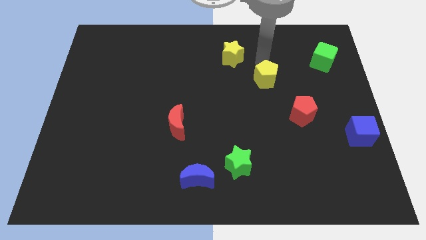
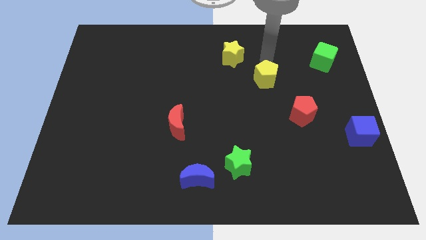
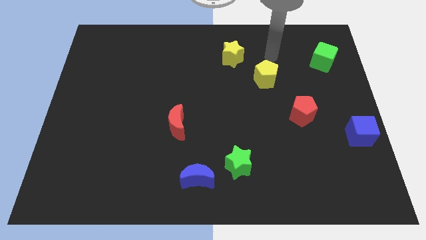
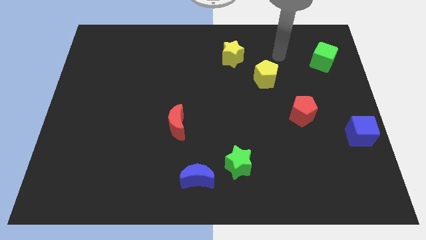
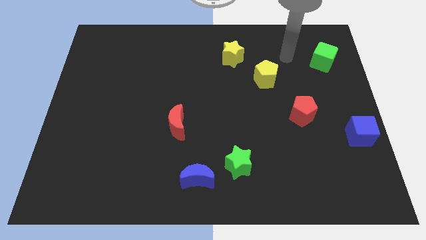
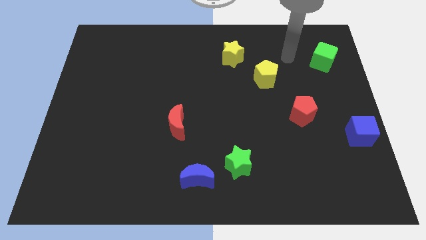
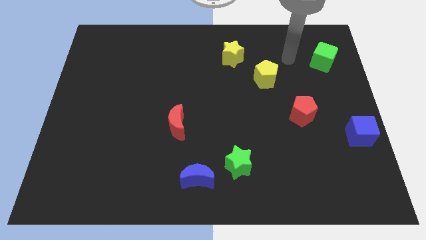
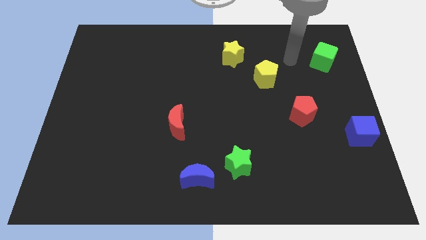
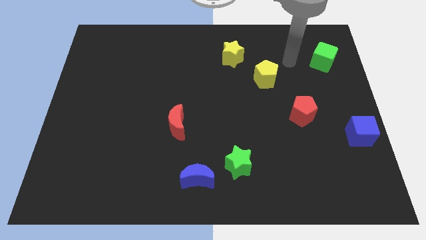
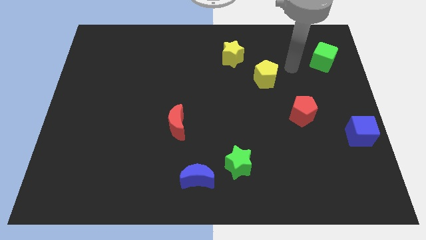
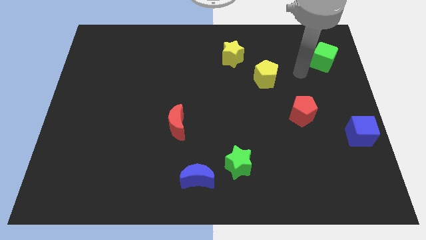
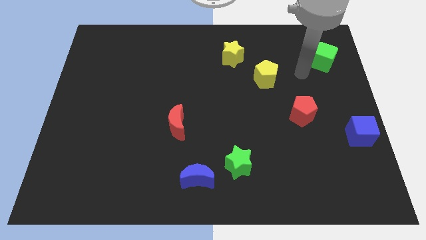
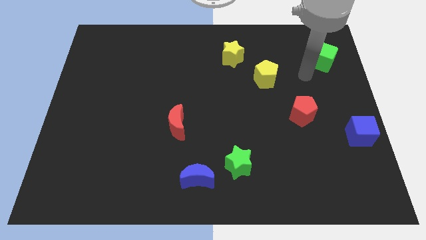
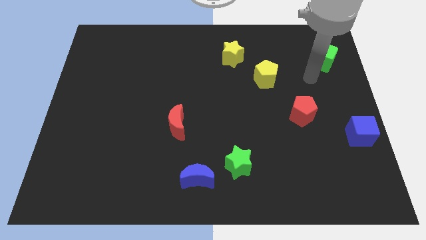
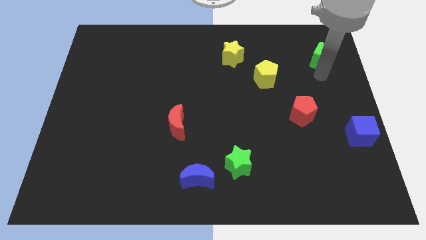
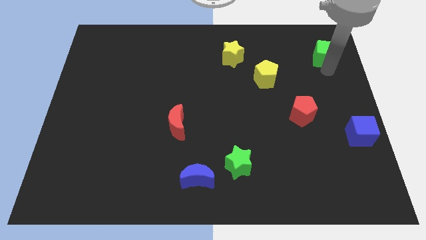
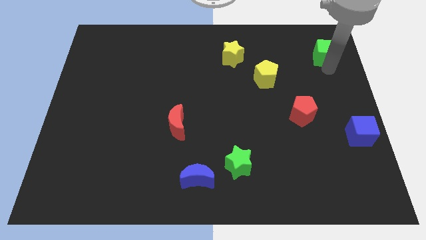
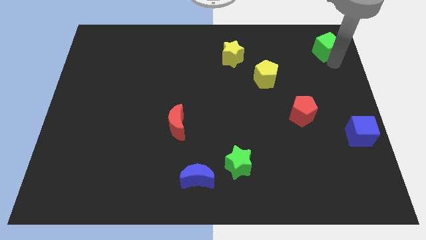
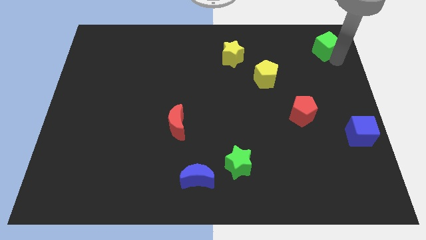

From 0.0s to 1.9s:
move the arm into the green cube

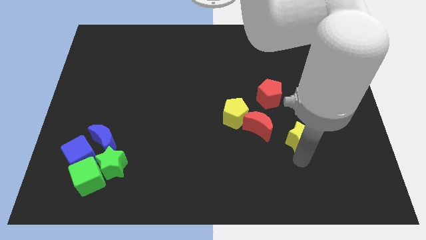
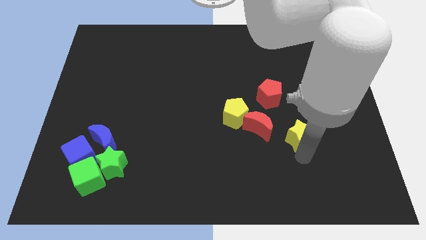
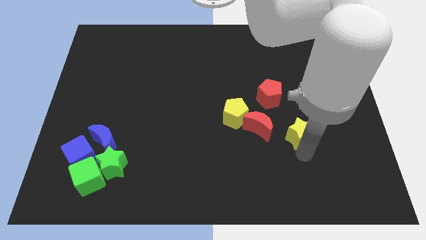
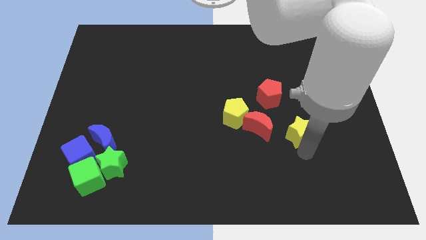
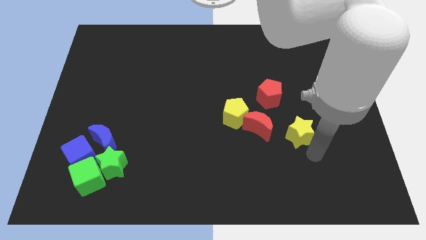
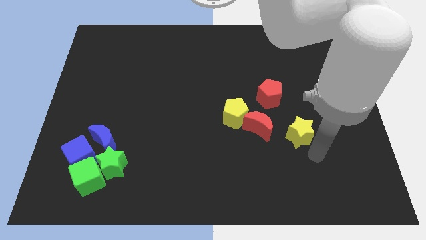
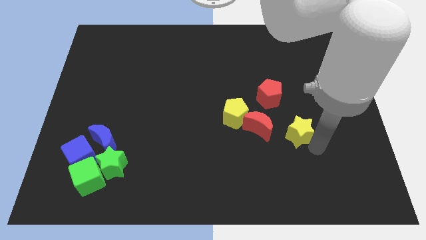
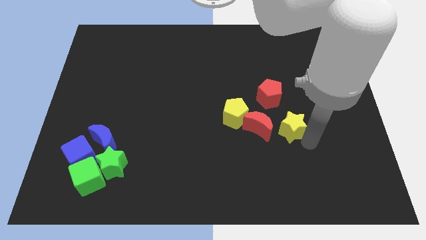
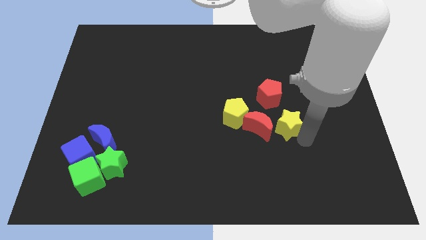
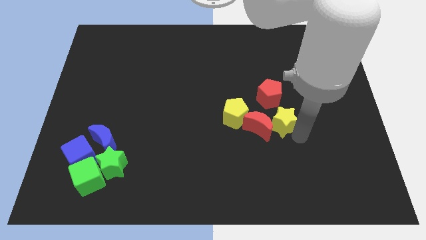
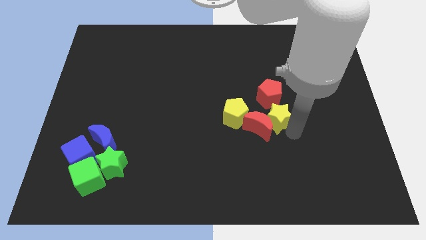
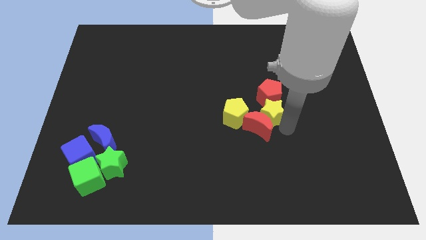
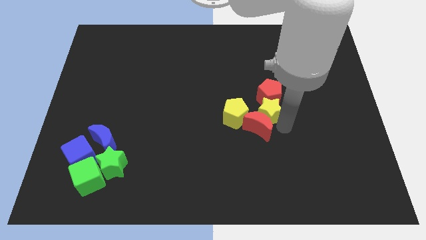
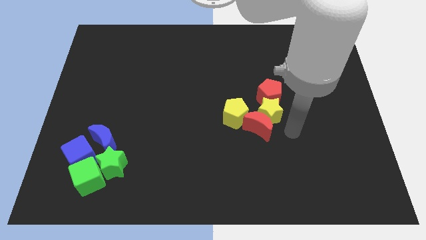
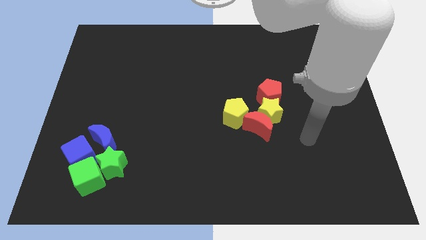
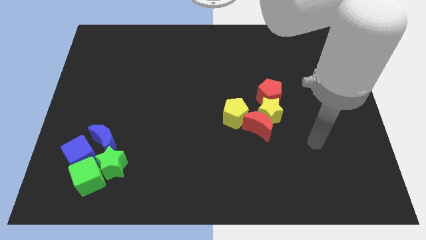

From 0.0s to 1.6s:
place yellow star below the red pentagon

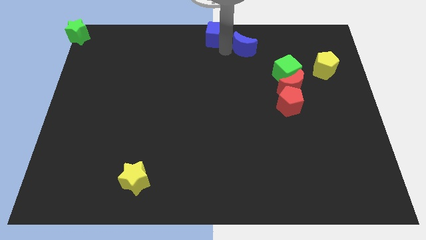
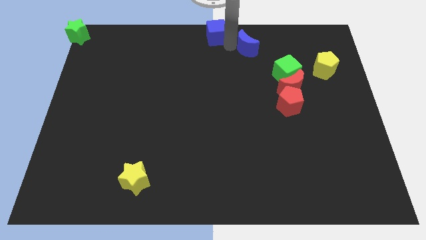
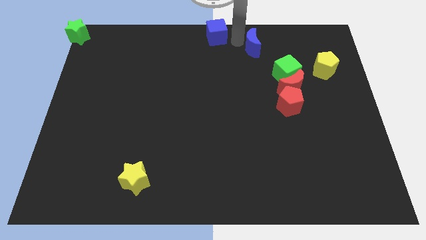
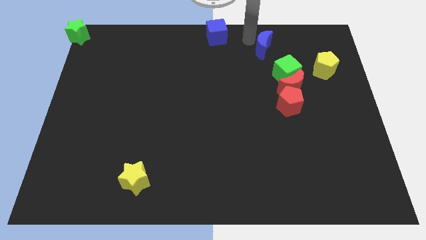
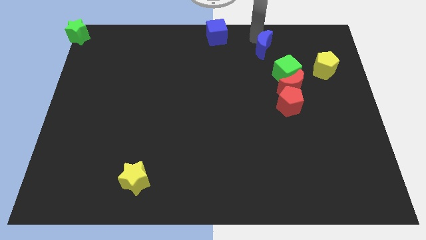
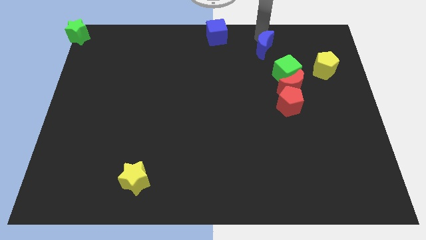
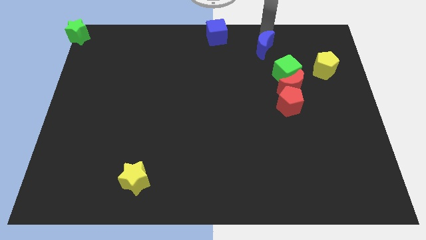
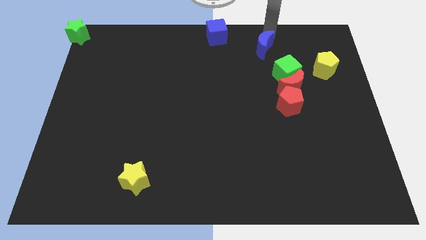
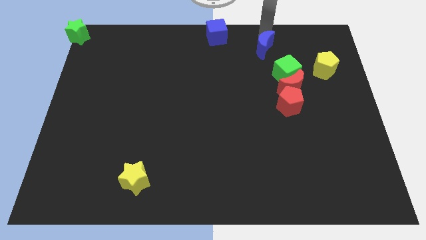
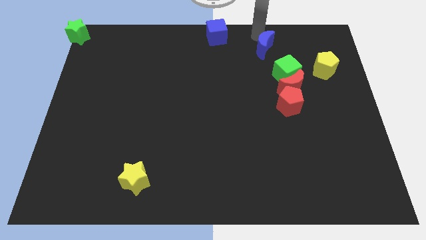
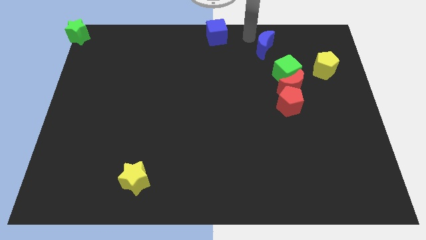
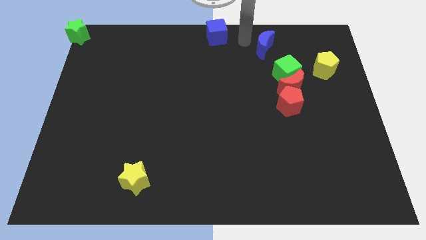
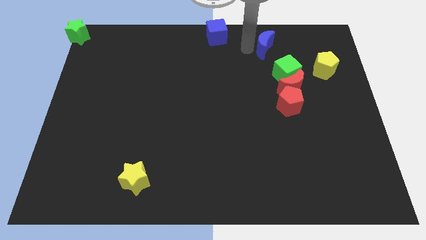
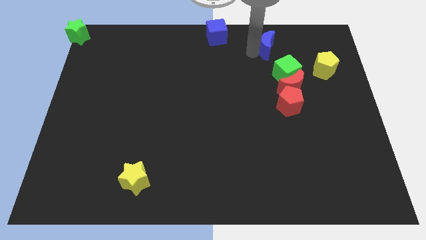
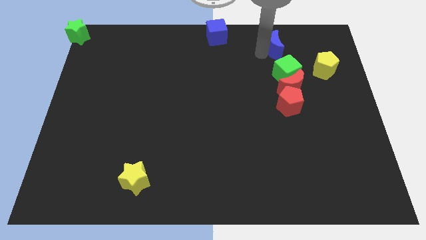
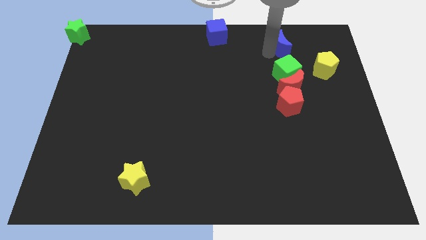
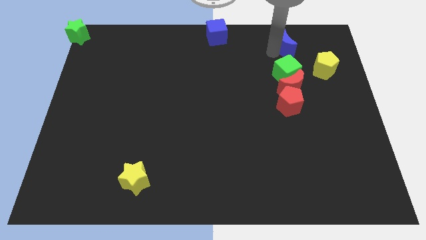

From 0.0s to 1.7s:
move the blue crescent to the top of the green cube

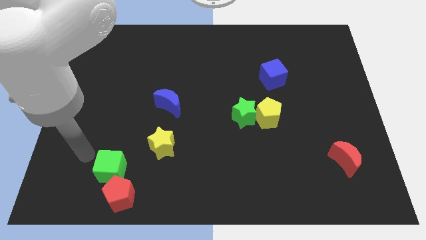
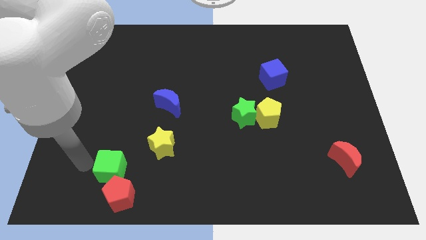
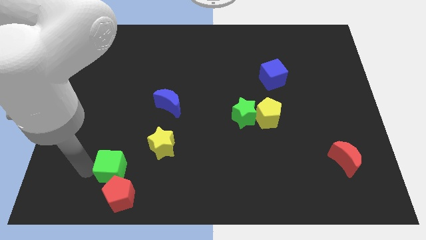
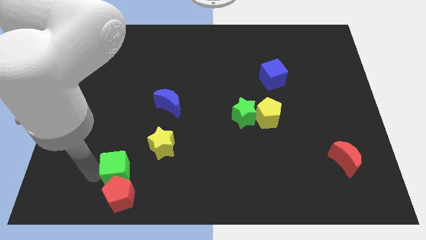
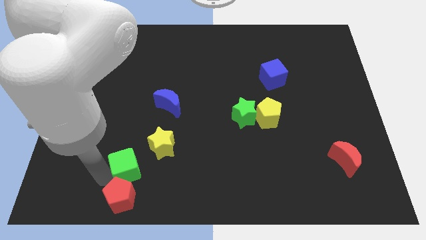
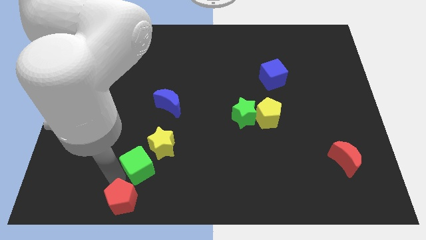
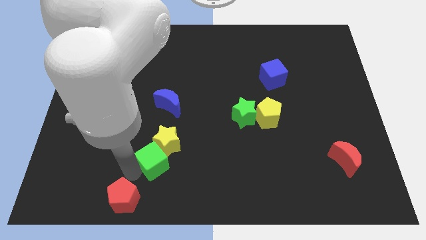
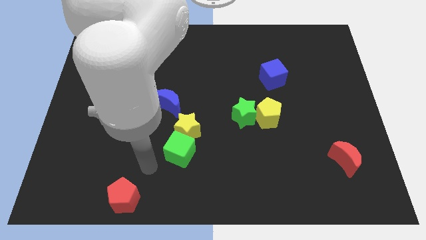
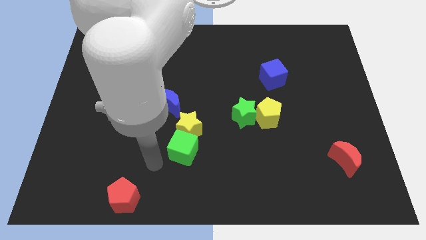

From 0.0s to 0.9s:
push the green cube into the yellow star

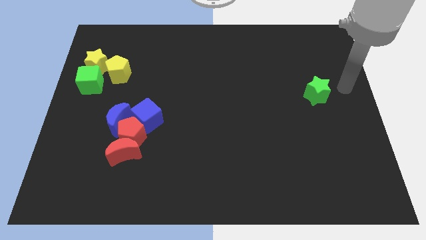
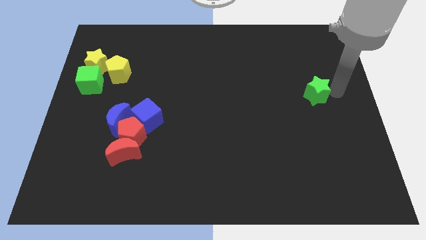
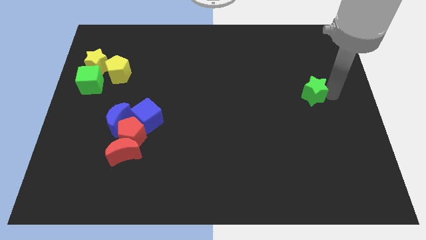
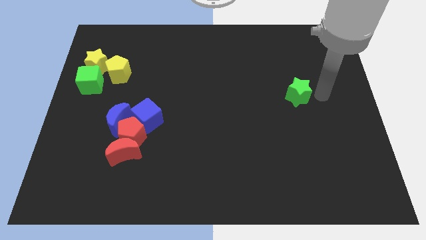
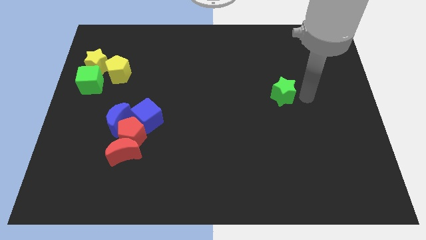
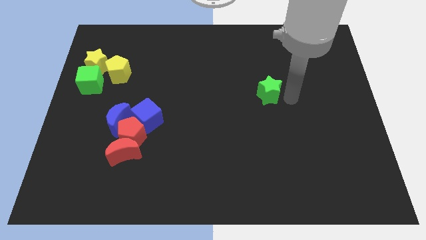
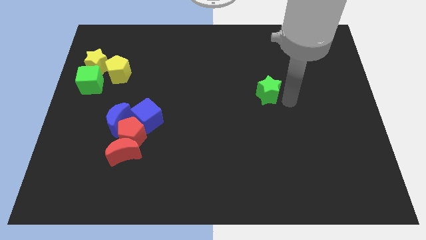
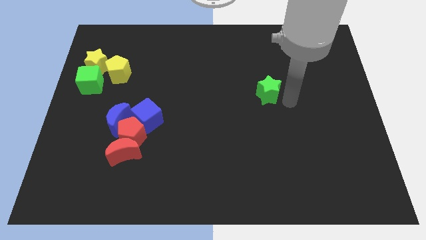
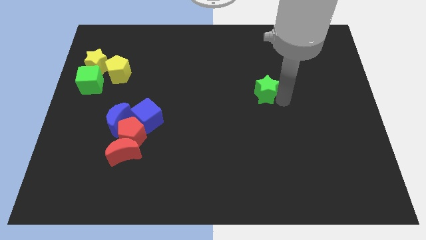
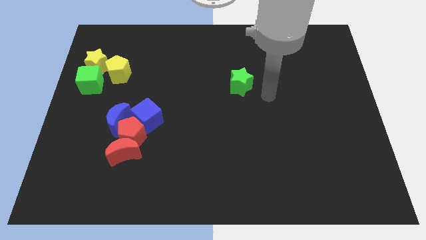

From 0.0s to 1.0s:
push green star slightly towards left

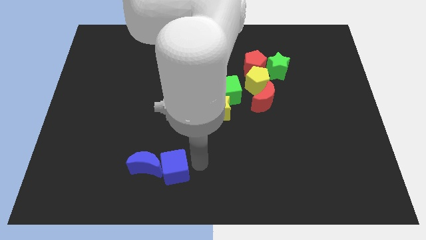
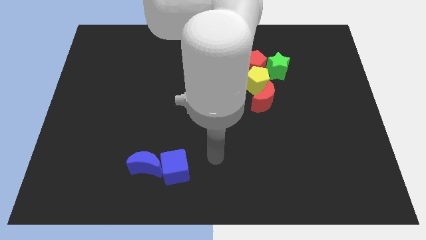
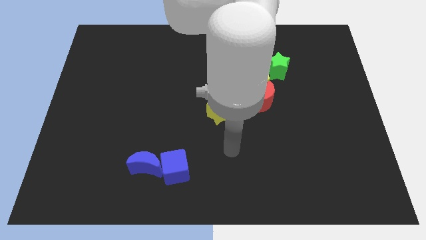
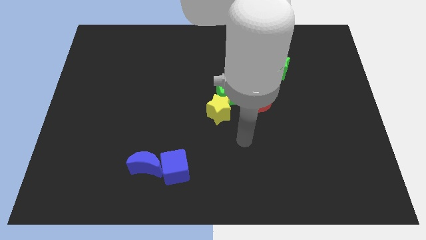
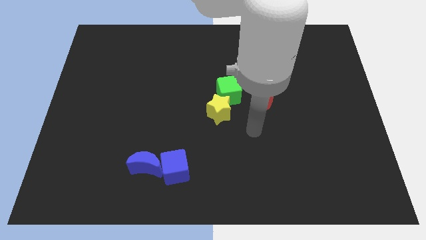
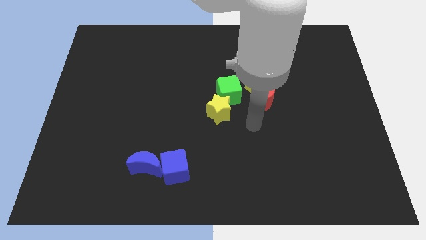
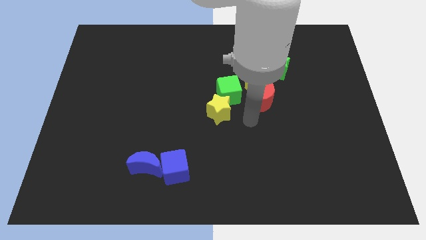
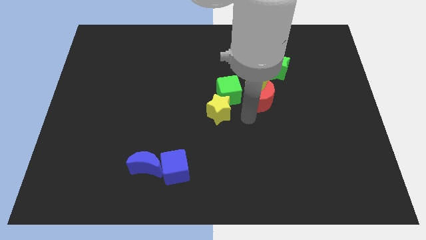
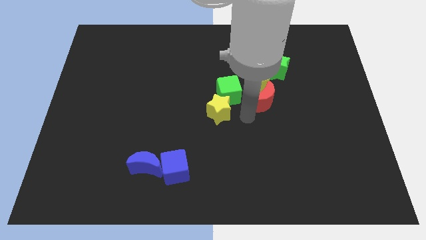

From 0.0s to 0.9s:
move the arm to the right side of the yellow star

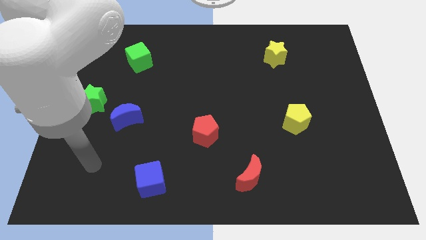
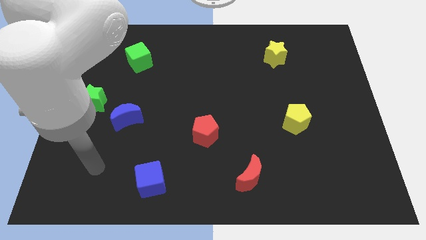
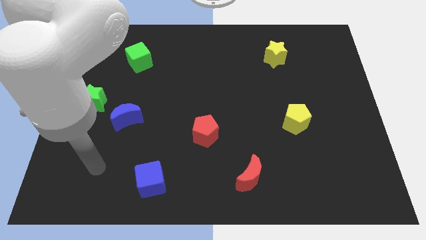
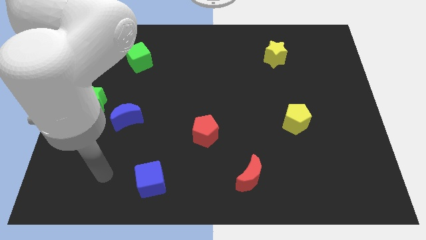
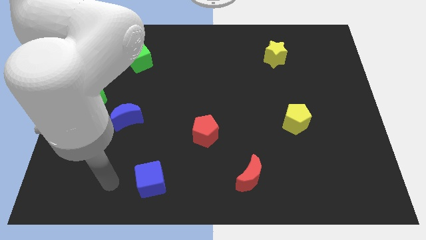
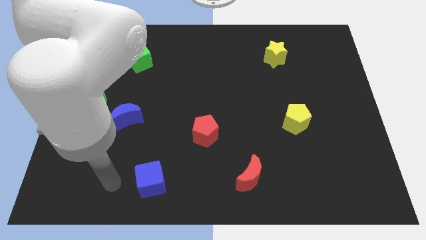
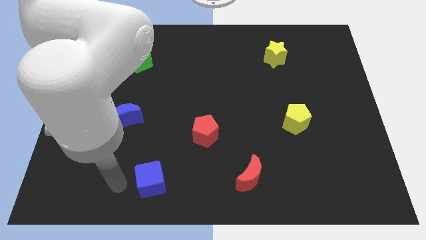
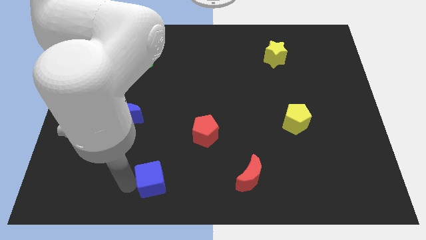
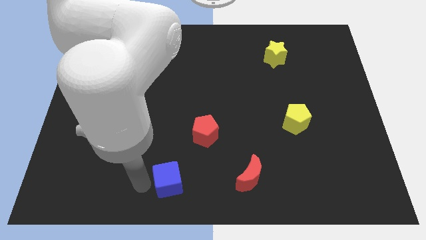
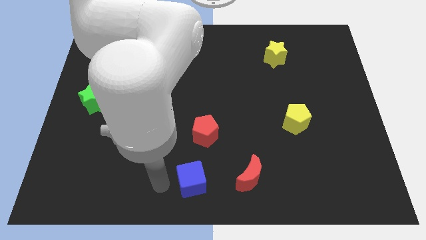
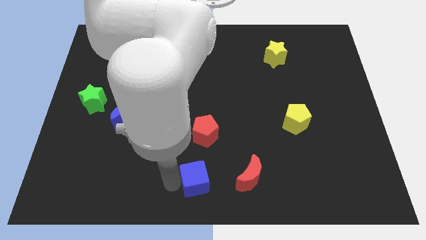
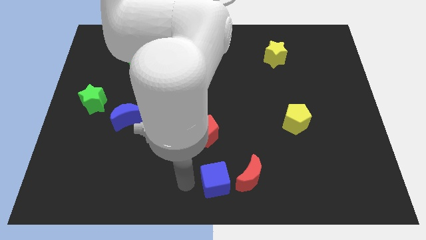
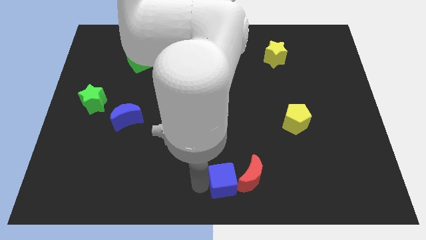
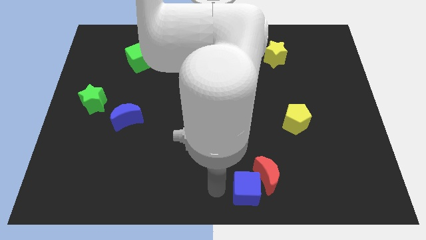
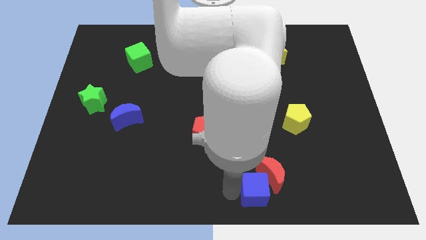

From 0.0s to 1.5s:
push the blue cube into the red crescent
